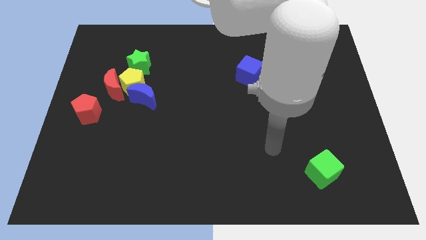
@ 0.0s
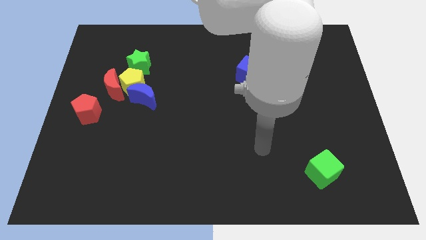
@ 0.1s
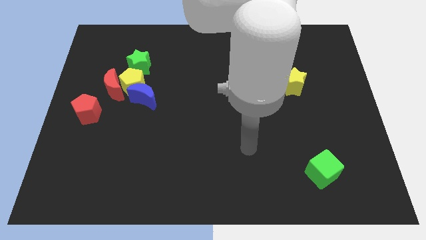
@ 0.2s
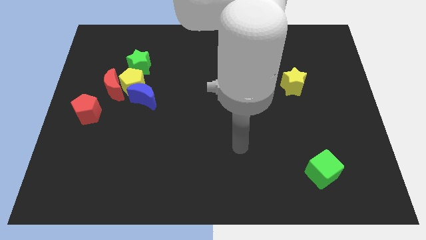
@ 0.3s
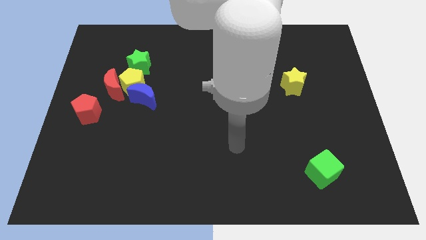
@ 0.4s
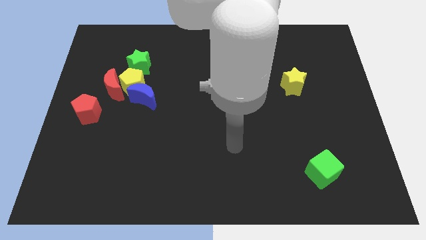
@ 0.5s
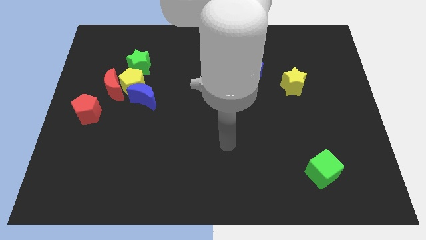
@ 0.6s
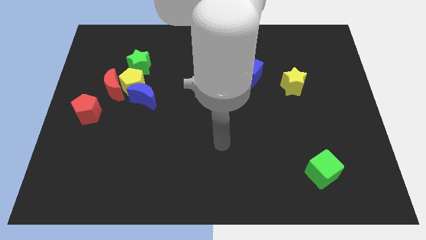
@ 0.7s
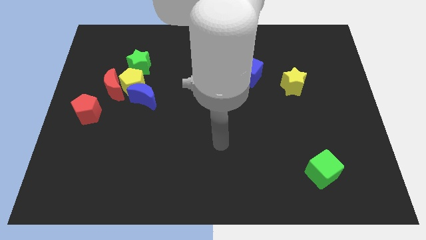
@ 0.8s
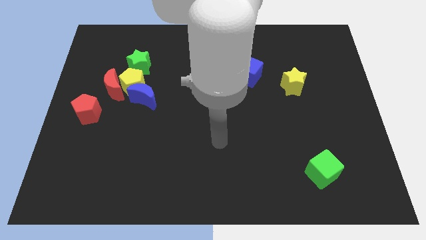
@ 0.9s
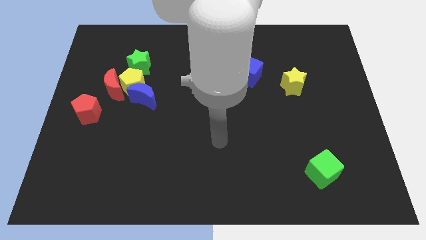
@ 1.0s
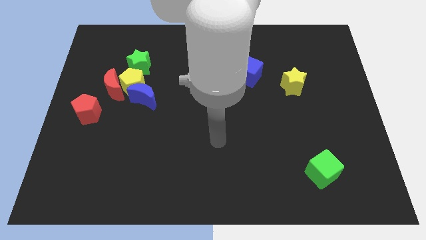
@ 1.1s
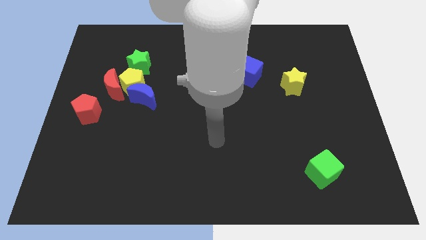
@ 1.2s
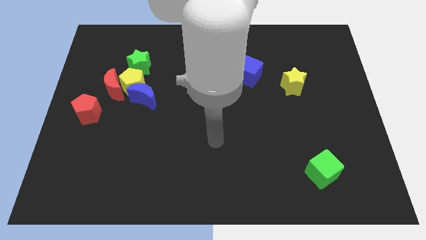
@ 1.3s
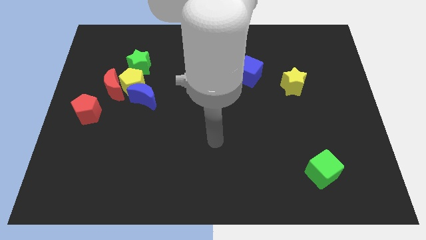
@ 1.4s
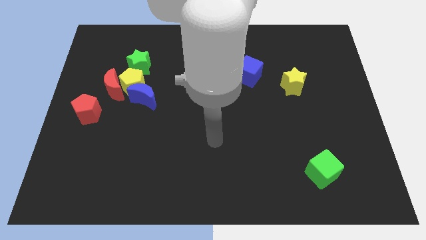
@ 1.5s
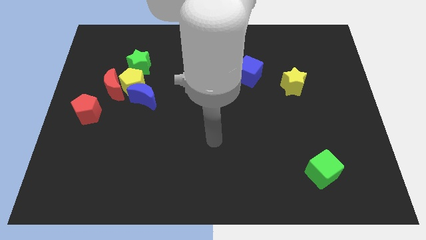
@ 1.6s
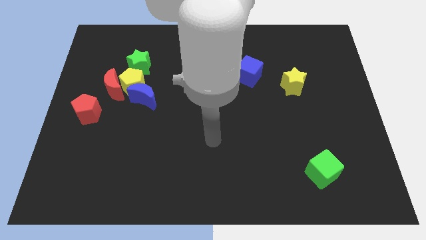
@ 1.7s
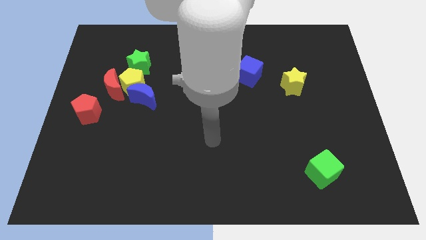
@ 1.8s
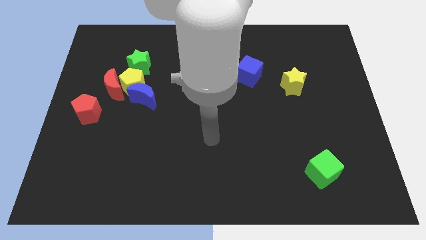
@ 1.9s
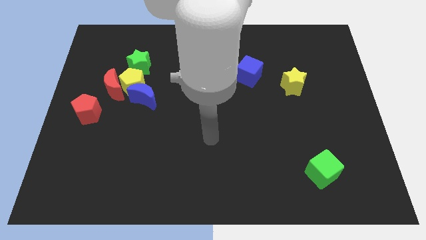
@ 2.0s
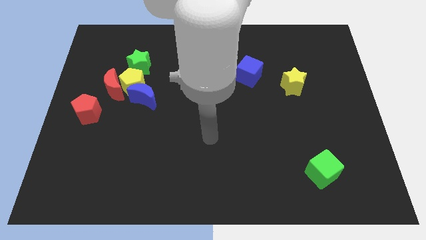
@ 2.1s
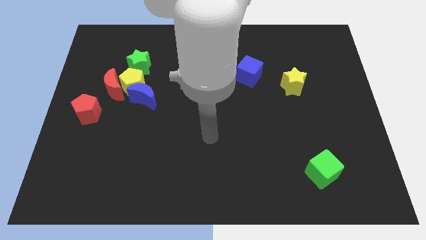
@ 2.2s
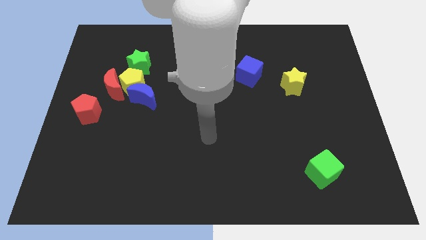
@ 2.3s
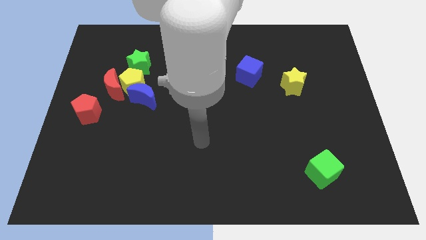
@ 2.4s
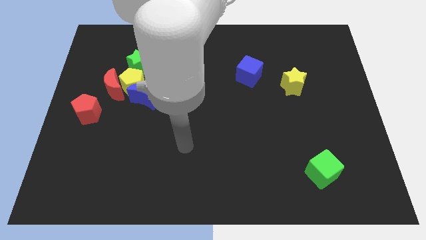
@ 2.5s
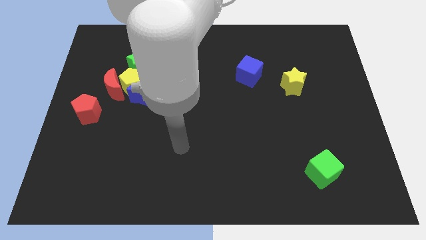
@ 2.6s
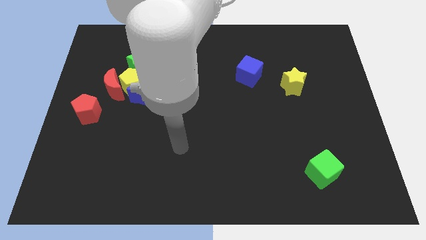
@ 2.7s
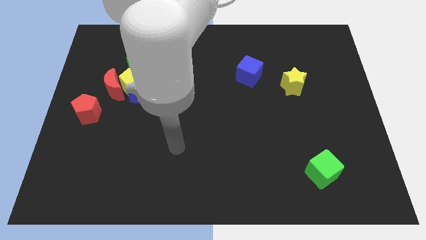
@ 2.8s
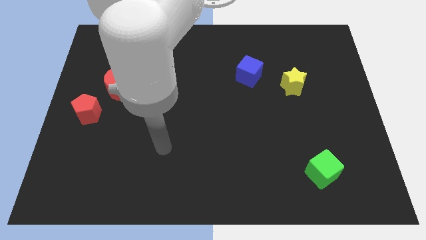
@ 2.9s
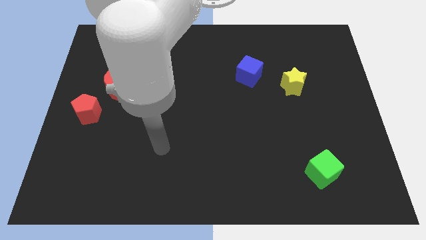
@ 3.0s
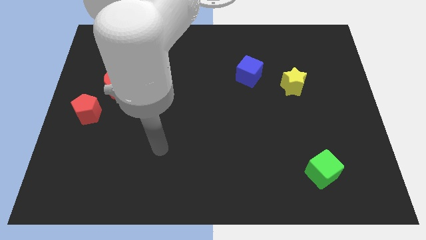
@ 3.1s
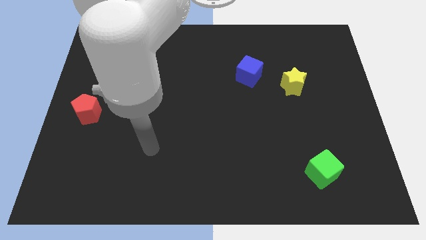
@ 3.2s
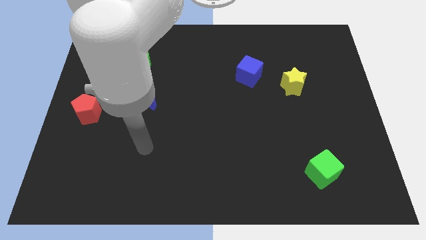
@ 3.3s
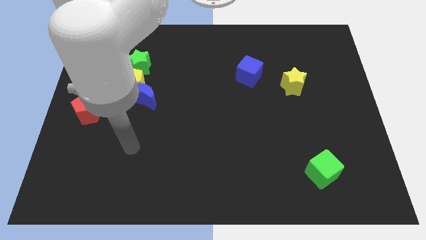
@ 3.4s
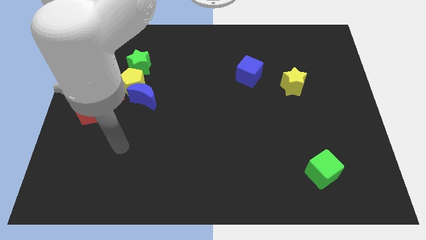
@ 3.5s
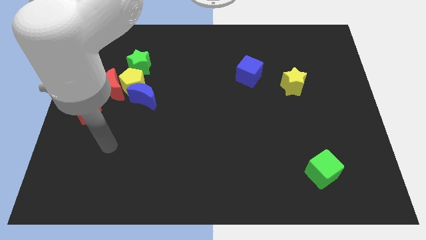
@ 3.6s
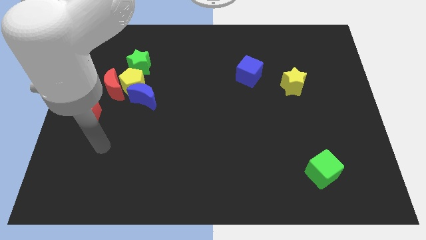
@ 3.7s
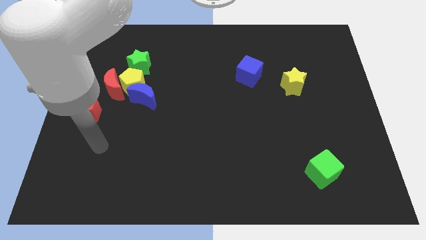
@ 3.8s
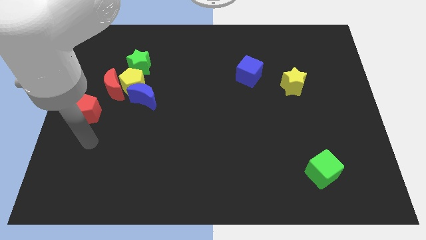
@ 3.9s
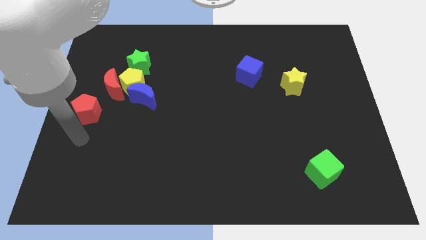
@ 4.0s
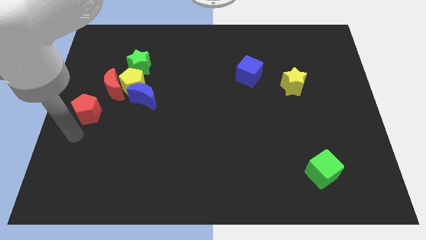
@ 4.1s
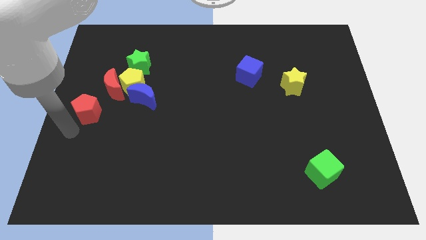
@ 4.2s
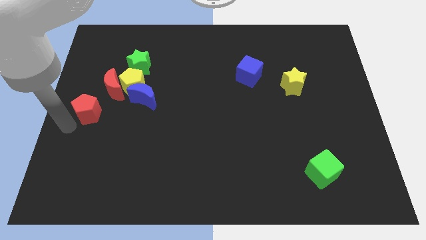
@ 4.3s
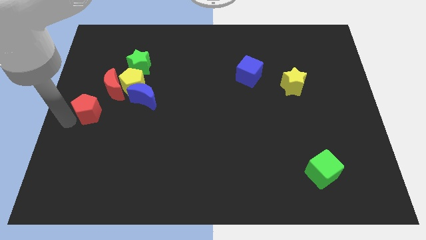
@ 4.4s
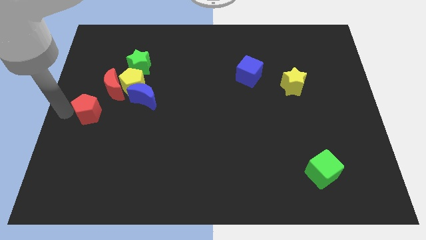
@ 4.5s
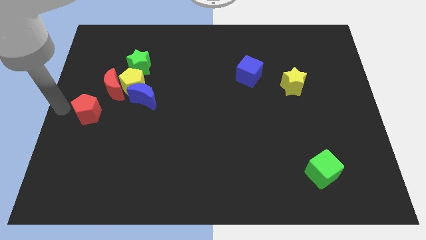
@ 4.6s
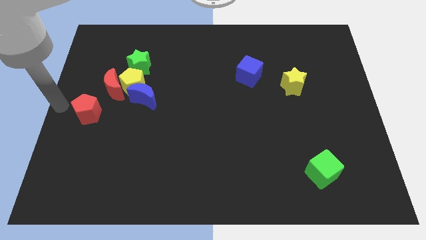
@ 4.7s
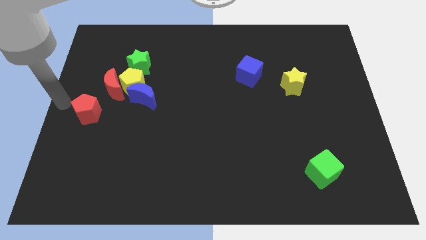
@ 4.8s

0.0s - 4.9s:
move your arm close to the red pentagon

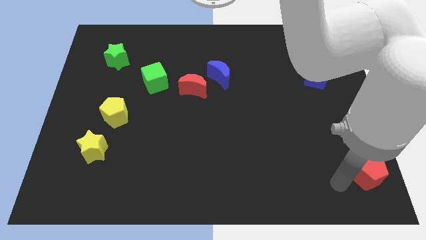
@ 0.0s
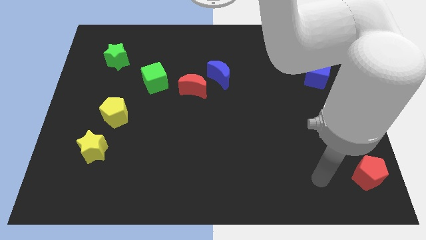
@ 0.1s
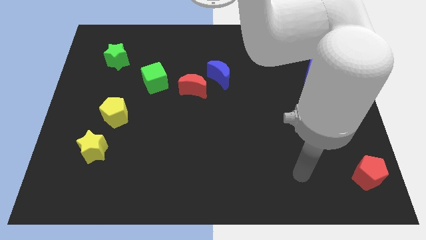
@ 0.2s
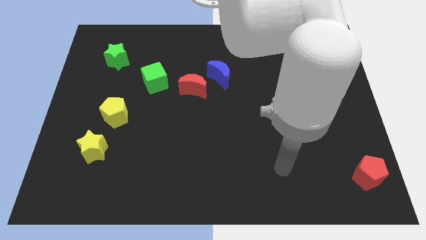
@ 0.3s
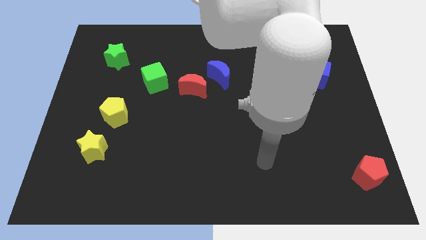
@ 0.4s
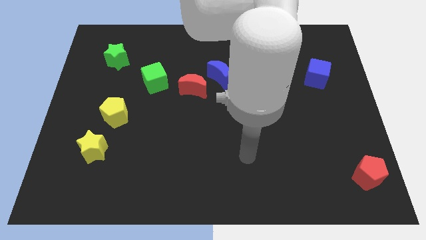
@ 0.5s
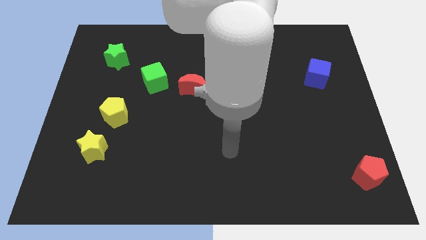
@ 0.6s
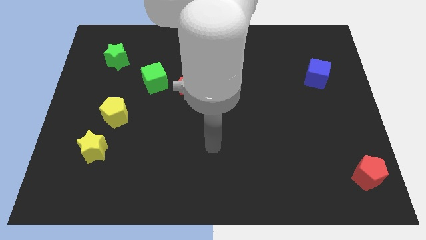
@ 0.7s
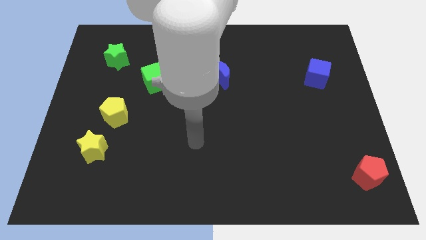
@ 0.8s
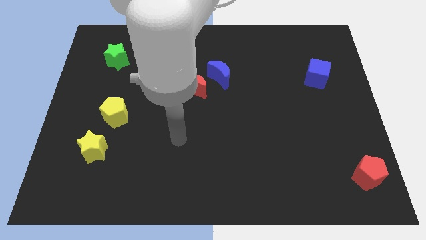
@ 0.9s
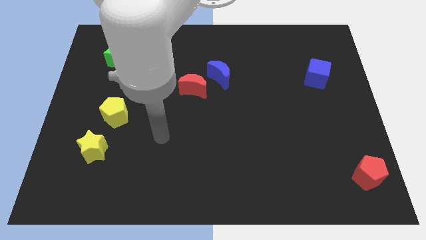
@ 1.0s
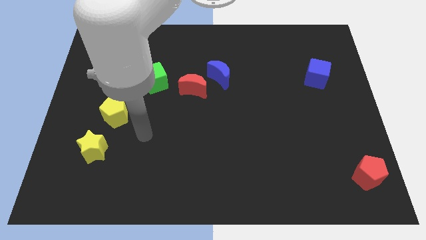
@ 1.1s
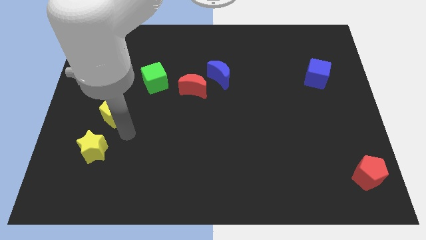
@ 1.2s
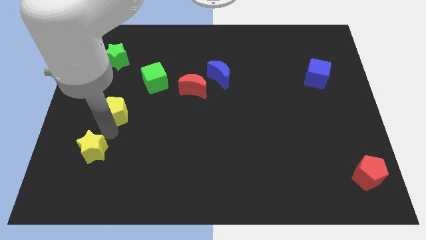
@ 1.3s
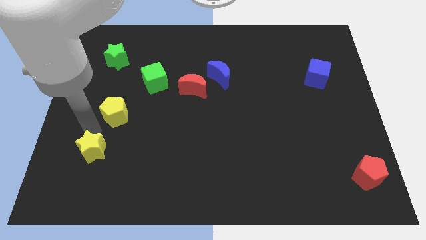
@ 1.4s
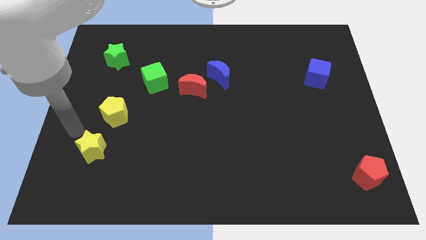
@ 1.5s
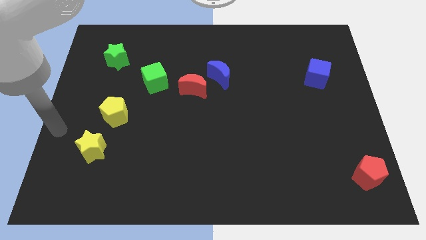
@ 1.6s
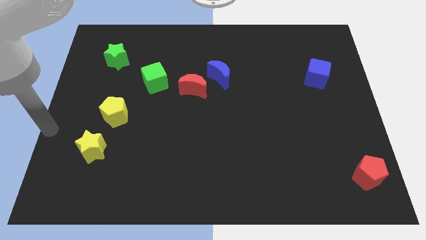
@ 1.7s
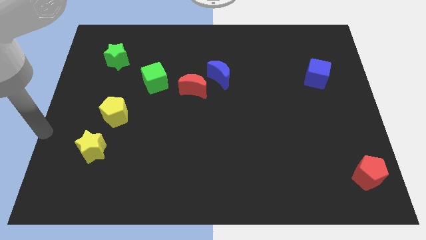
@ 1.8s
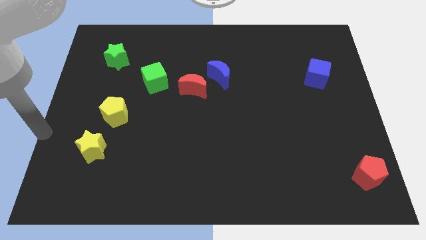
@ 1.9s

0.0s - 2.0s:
move your arm away from the red pentagon

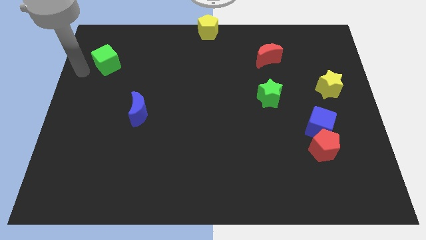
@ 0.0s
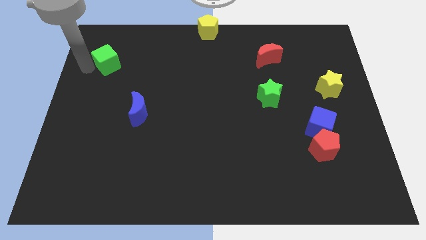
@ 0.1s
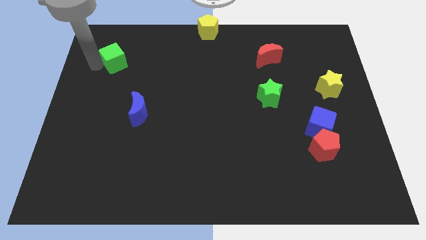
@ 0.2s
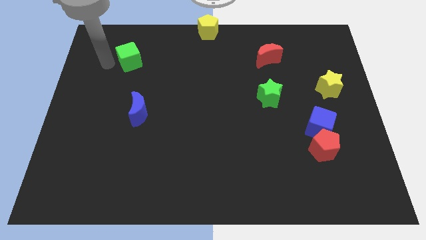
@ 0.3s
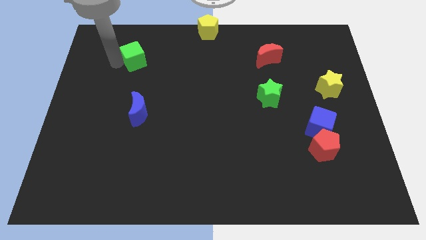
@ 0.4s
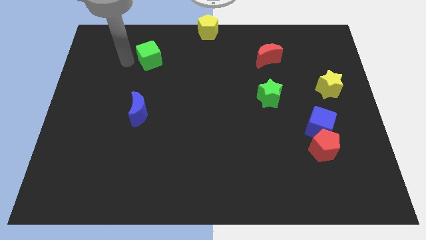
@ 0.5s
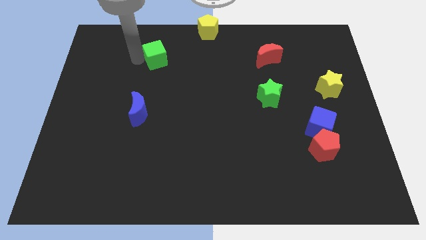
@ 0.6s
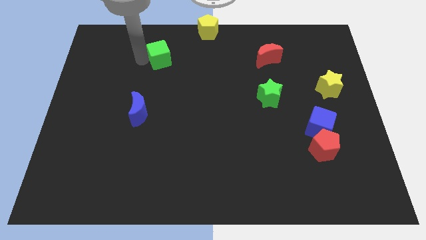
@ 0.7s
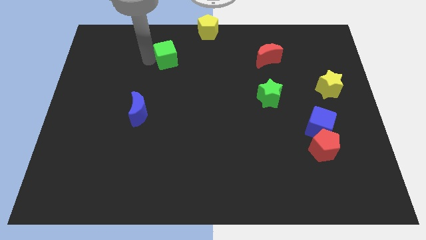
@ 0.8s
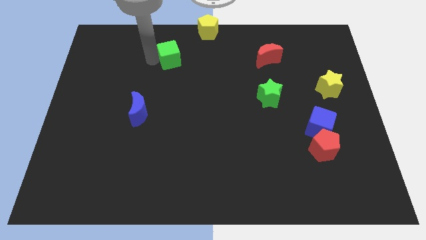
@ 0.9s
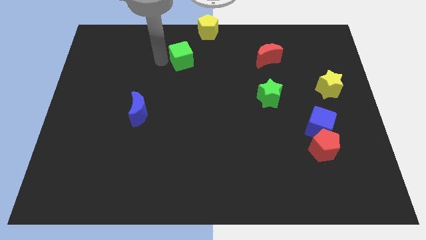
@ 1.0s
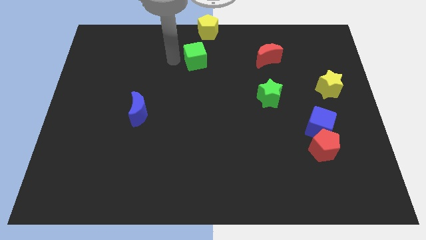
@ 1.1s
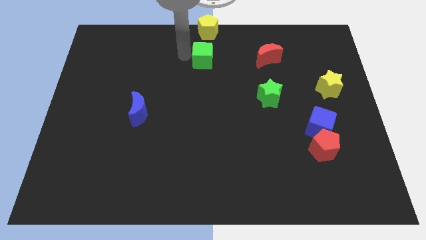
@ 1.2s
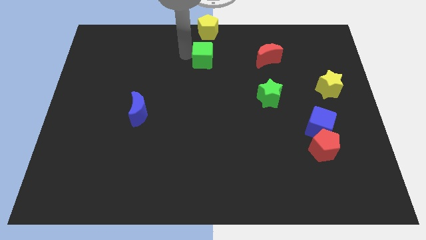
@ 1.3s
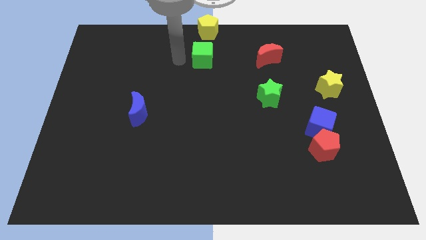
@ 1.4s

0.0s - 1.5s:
move the green cube at the bottom side of the yellow pentagon

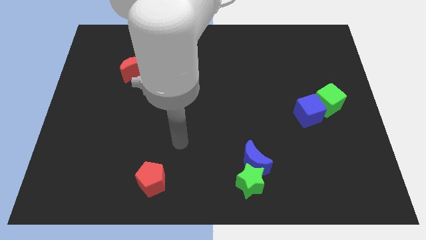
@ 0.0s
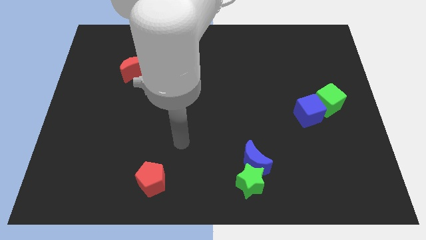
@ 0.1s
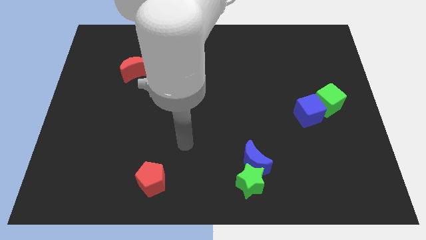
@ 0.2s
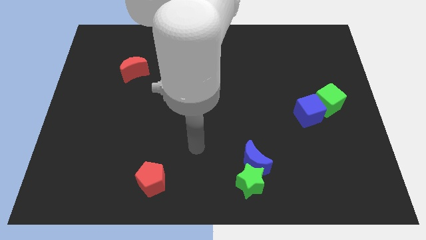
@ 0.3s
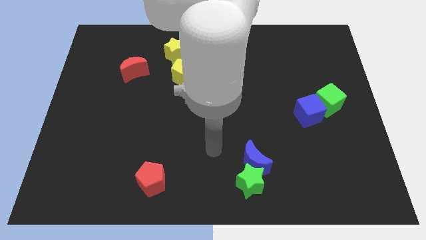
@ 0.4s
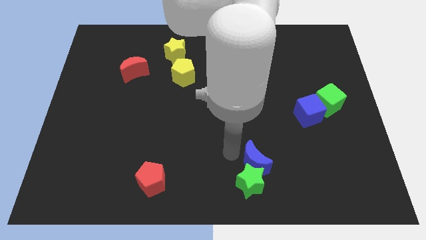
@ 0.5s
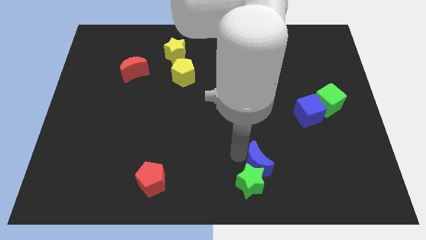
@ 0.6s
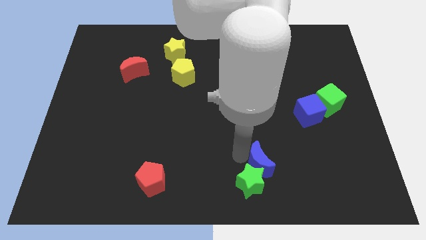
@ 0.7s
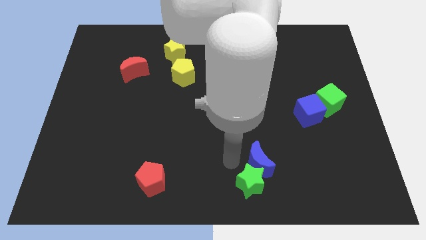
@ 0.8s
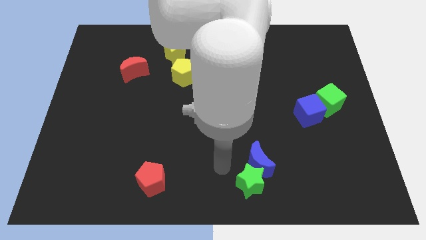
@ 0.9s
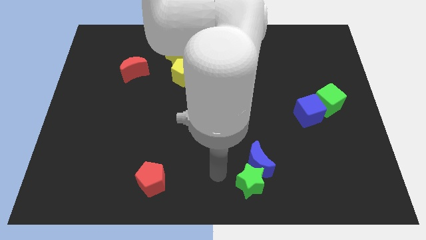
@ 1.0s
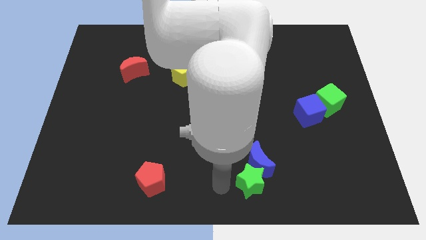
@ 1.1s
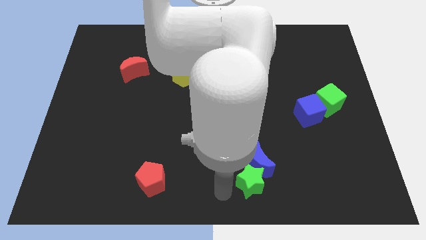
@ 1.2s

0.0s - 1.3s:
move the blue moon to the right slightly
